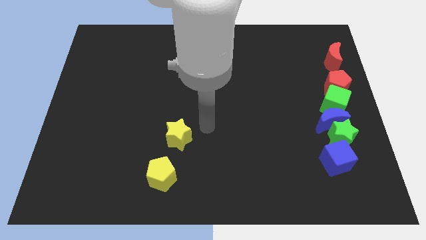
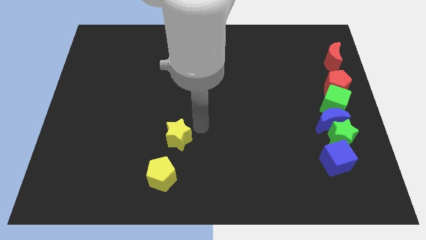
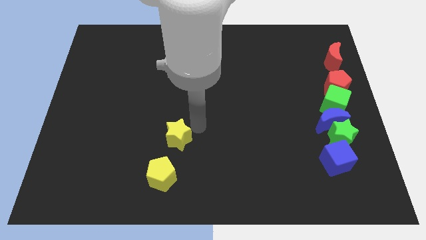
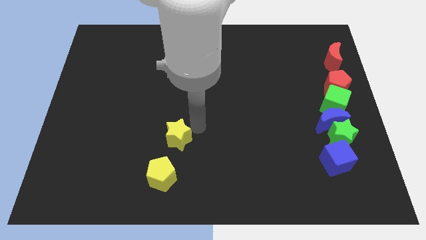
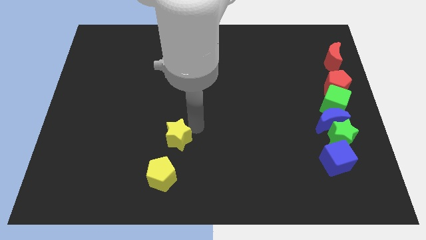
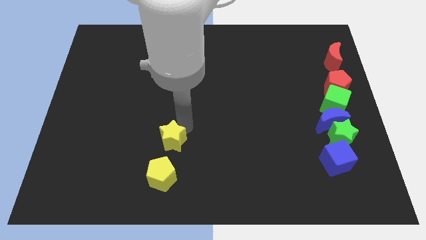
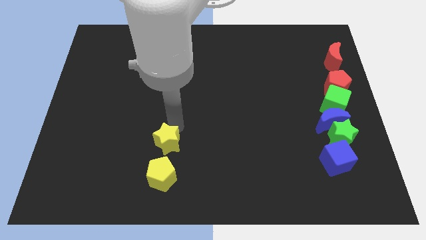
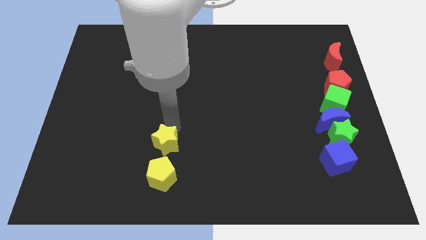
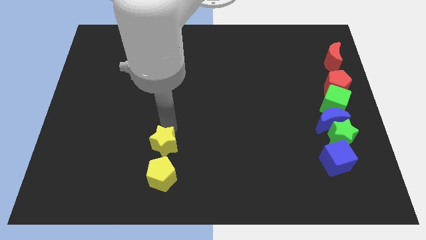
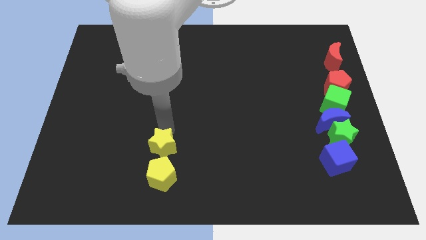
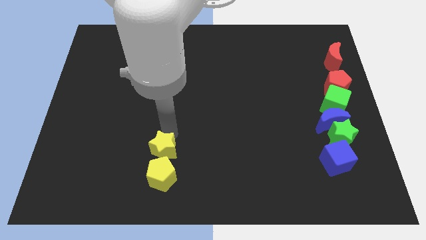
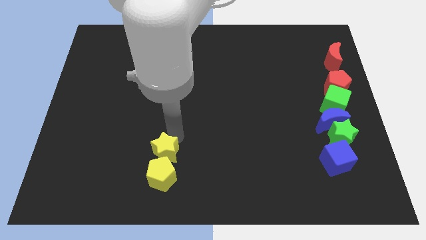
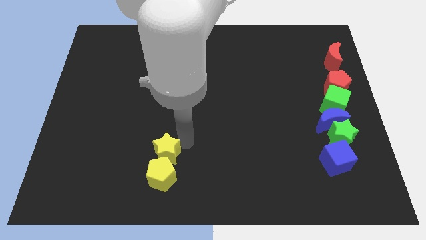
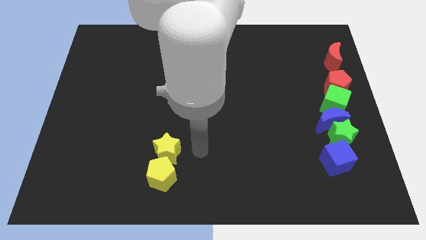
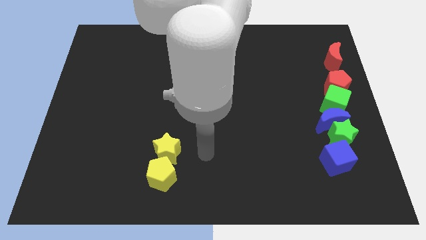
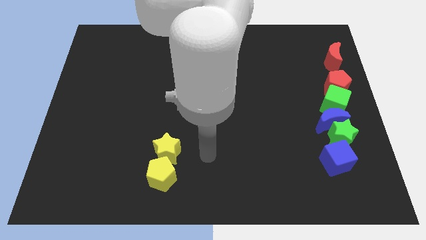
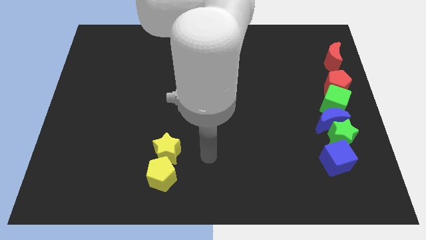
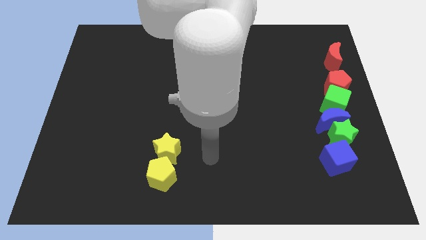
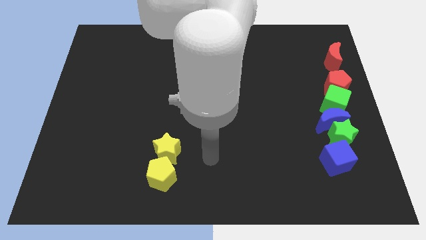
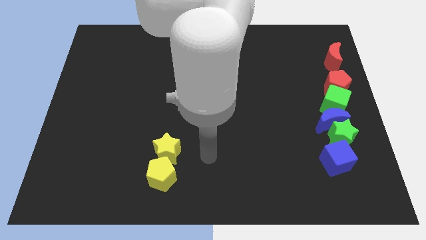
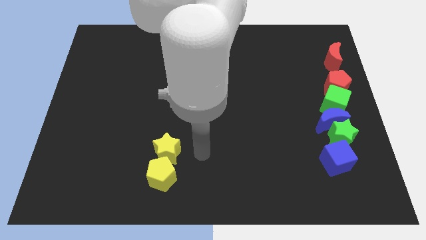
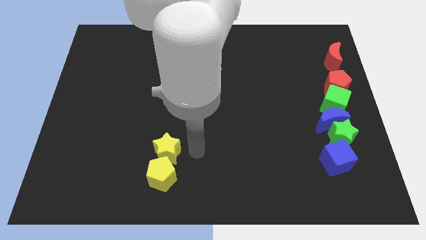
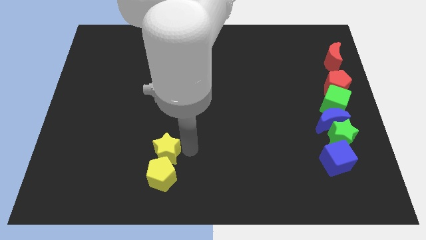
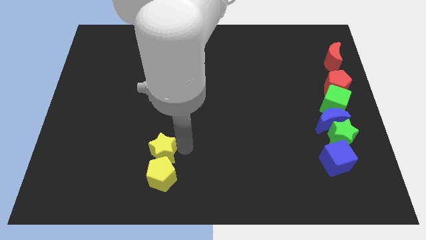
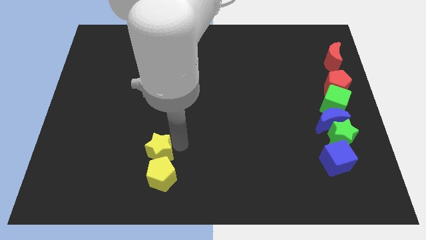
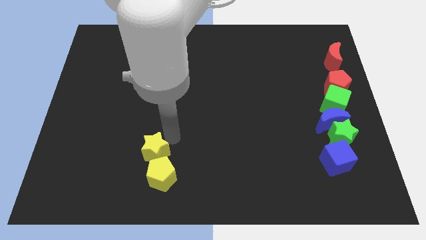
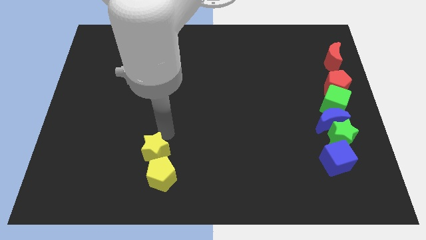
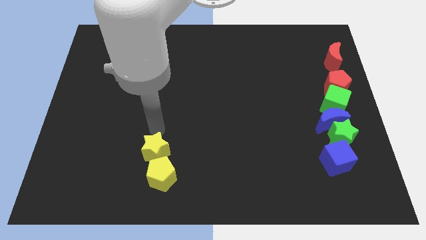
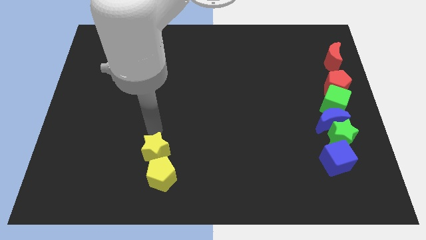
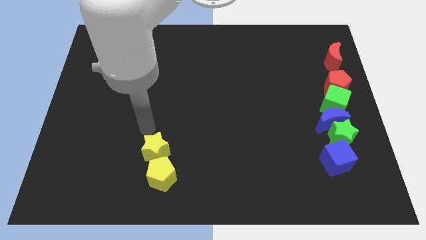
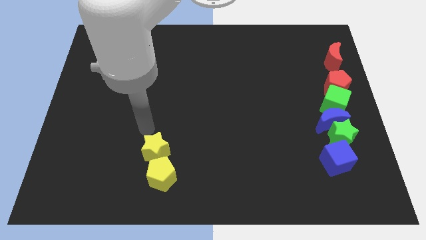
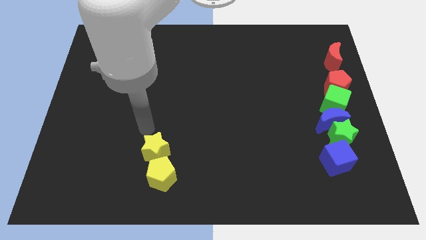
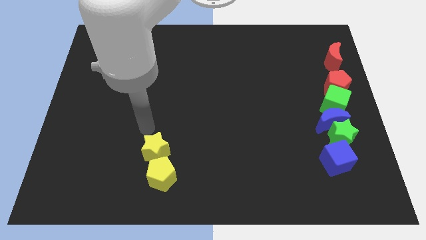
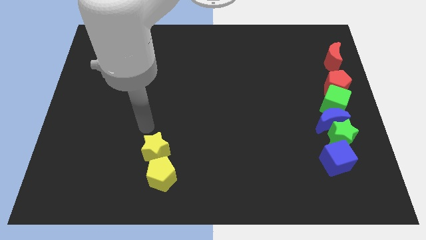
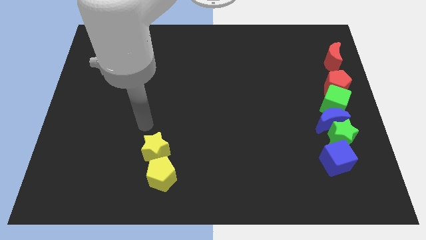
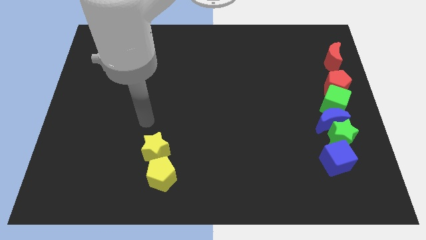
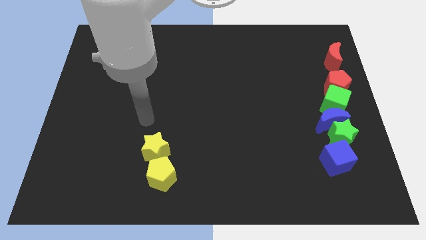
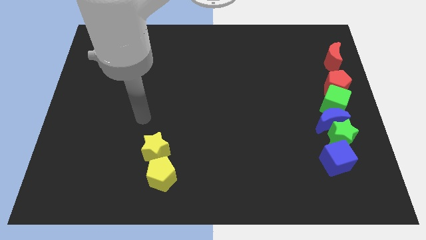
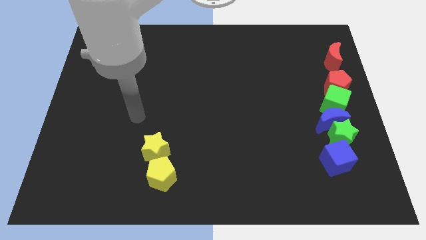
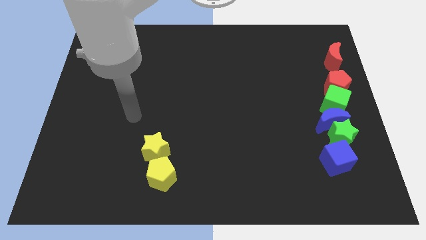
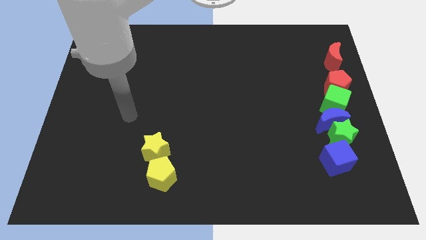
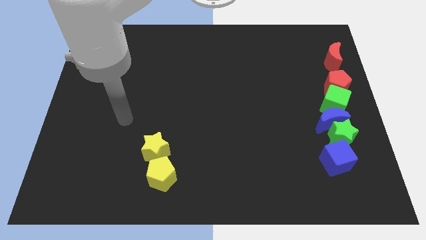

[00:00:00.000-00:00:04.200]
push the yellow star to the top left side of the yellow pentagon

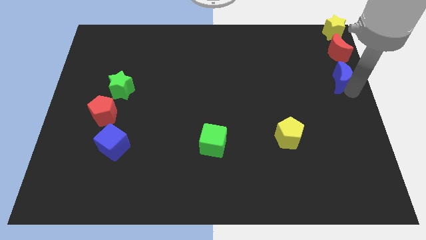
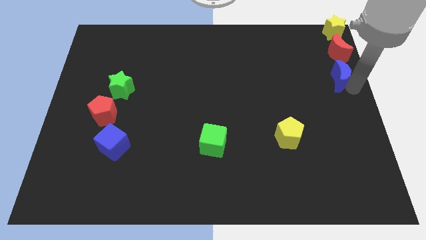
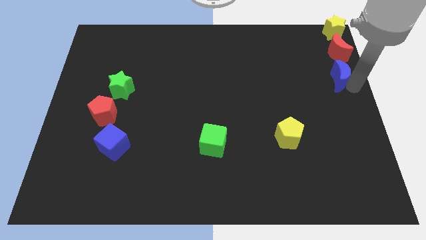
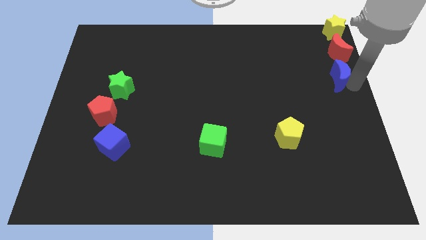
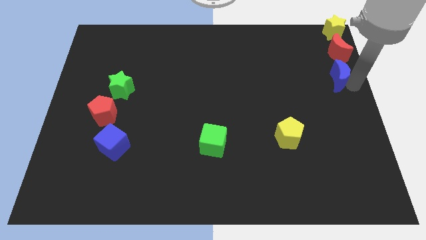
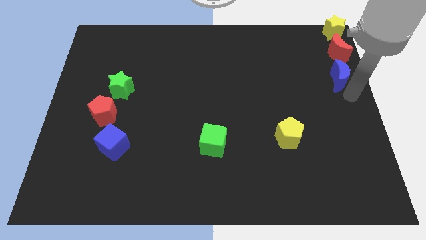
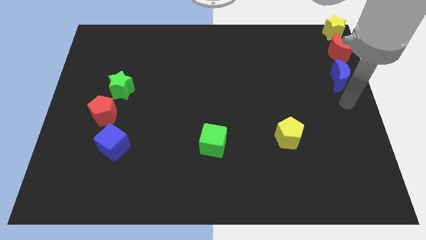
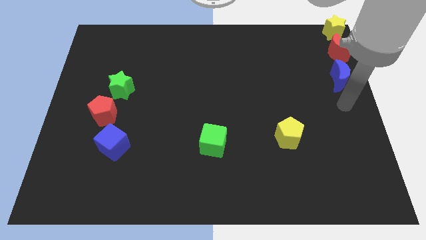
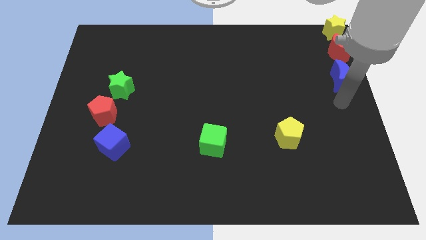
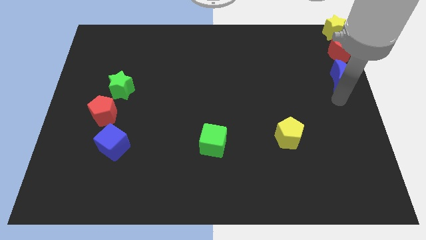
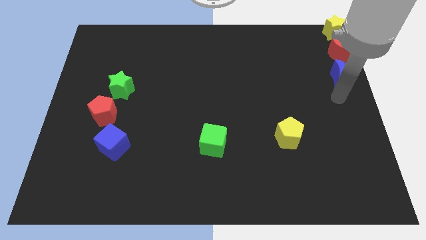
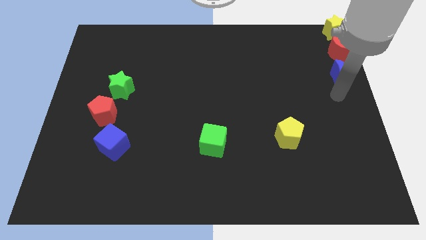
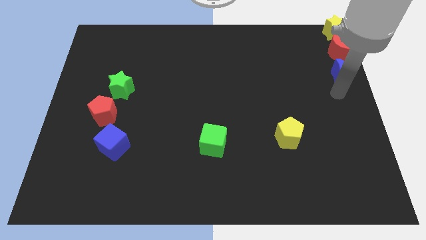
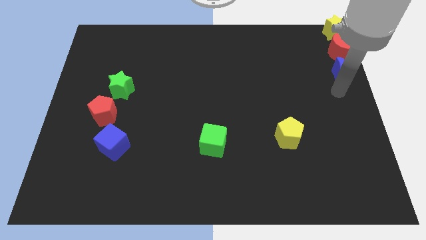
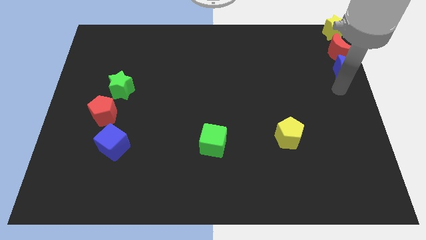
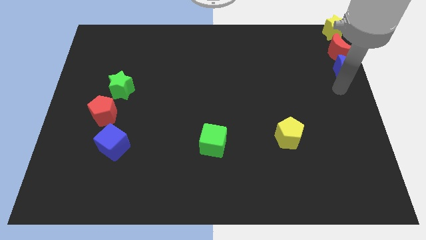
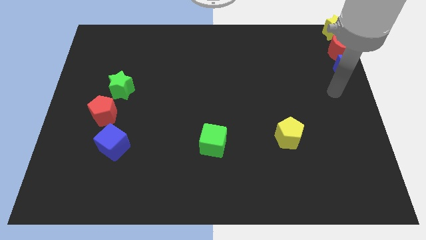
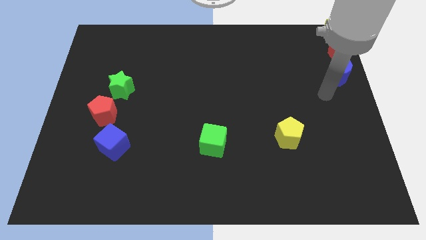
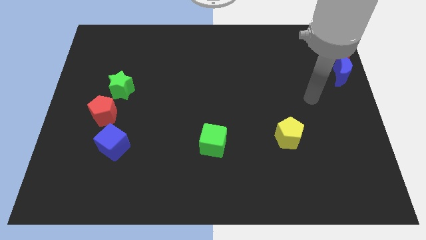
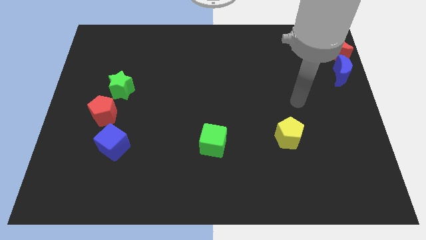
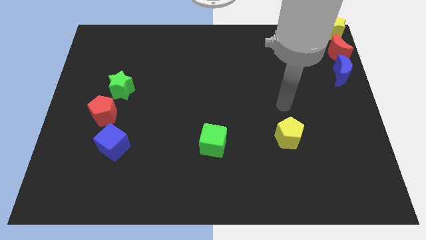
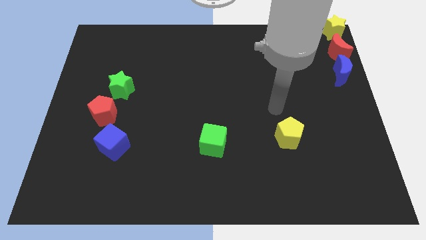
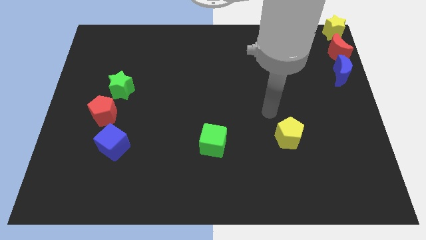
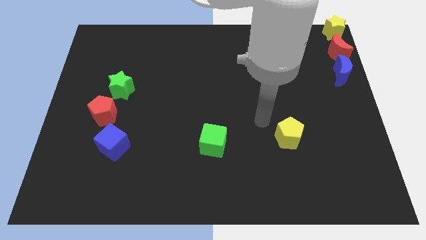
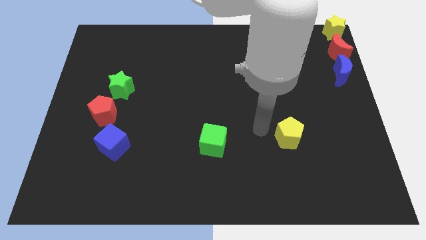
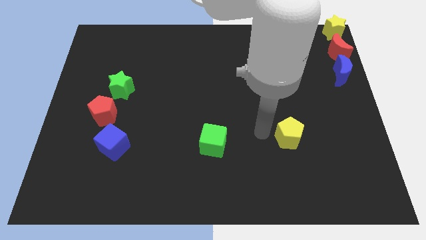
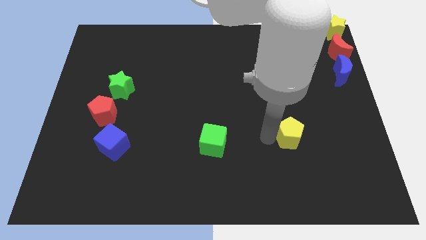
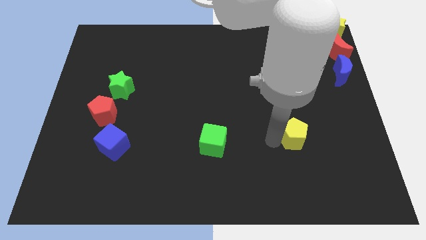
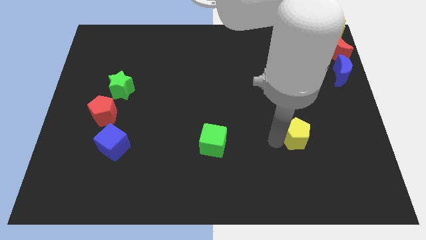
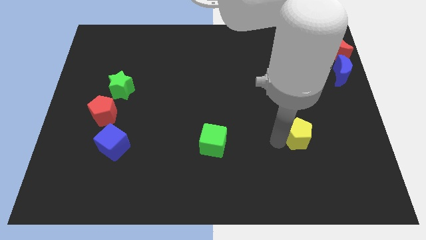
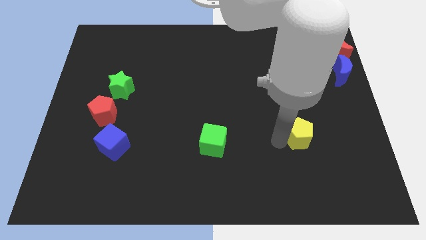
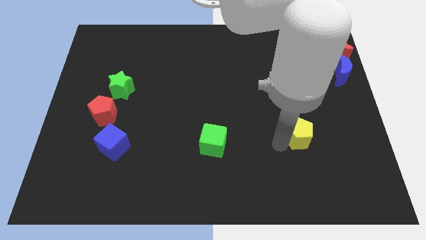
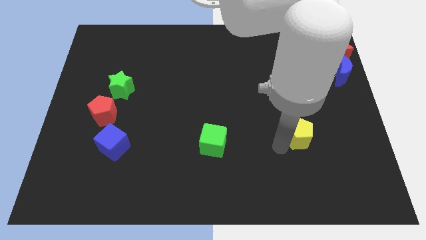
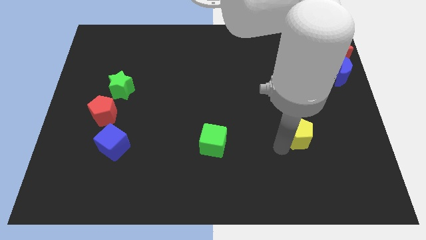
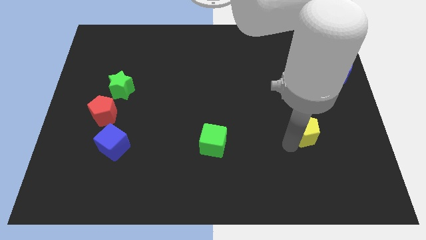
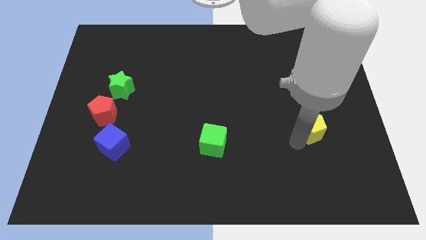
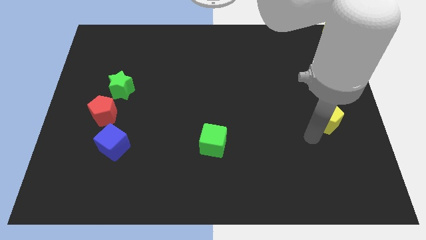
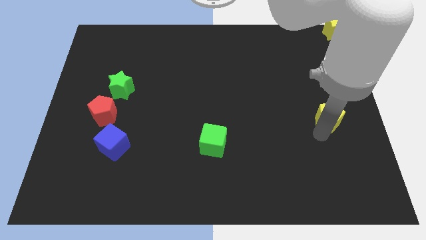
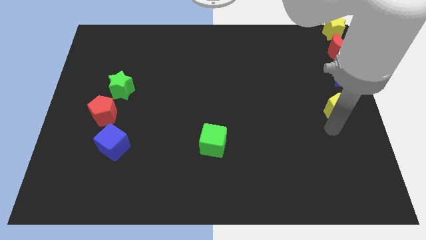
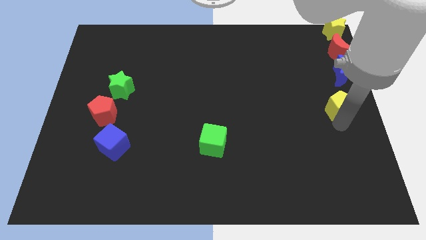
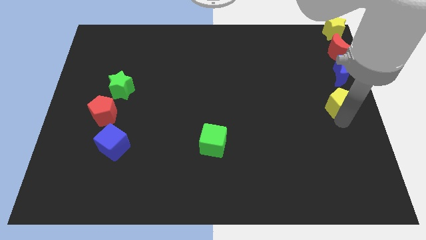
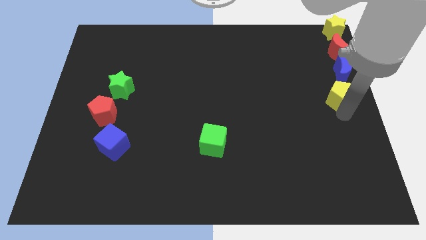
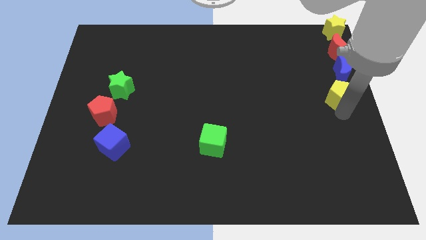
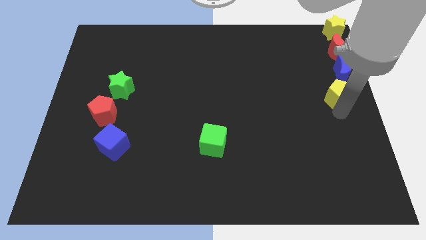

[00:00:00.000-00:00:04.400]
move the yellow pentagon below the blue moon

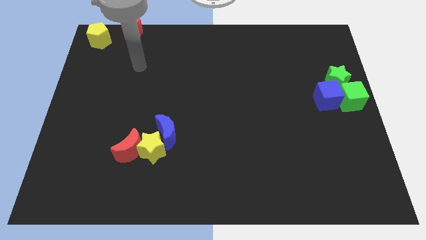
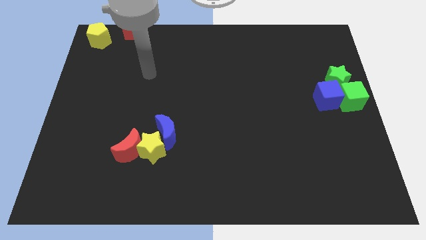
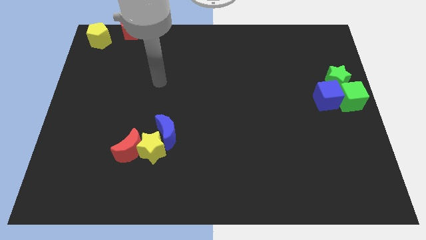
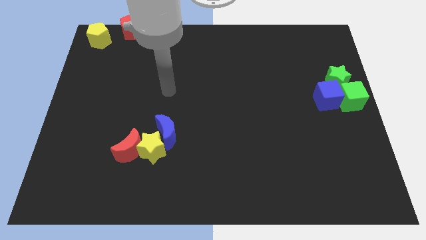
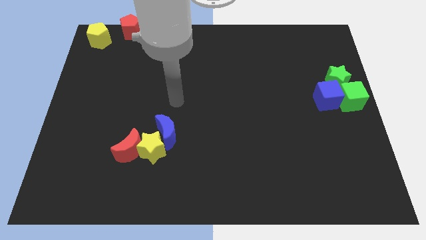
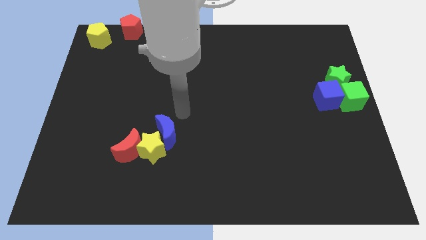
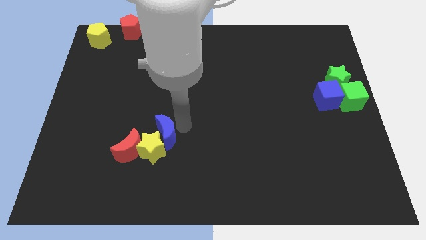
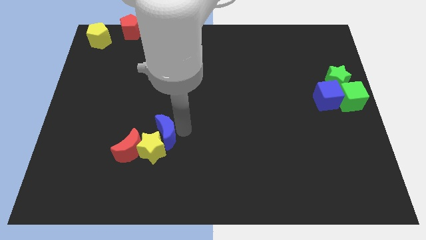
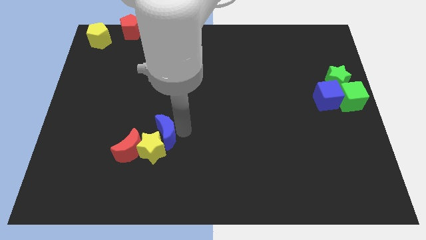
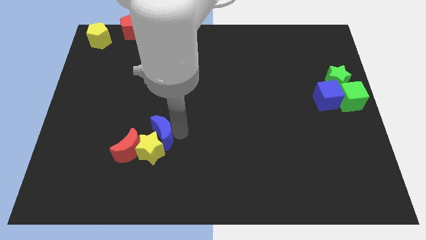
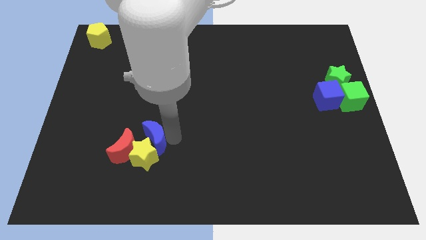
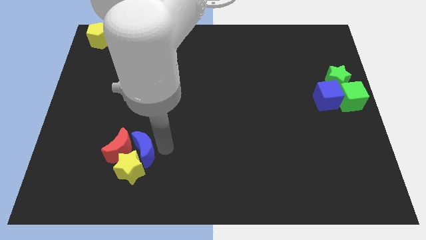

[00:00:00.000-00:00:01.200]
tap on the right side of blue moon
